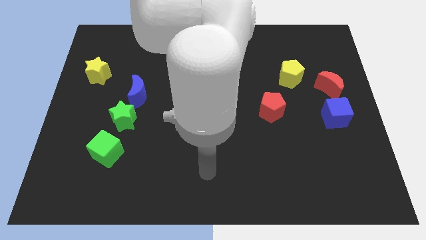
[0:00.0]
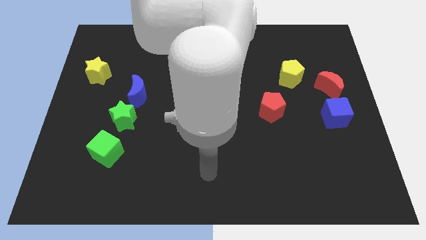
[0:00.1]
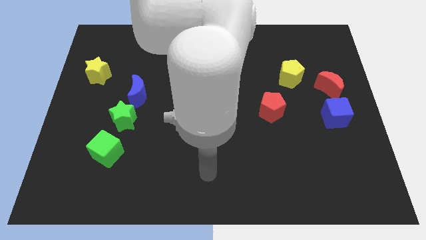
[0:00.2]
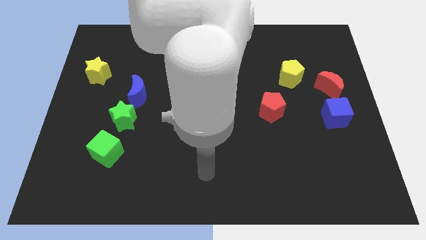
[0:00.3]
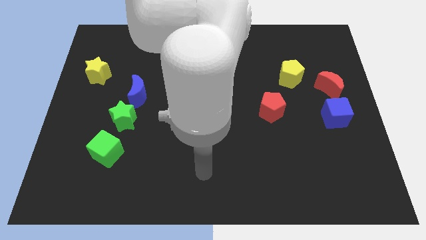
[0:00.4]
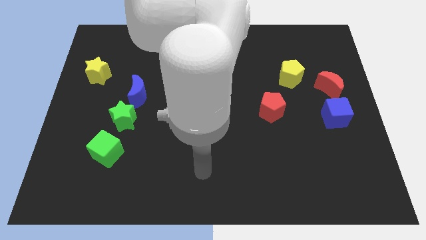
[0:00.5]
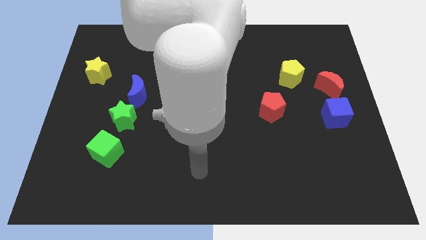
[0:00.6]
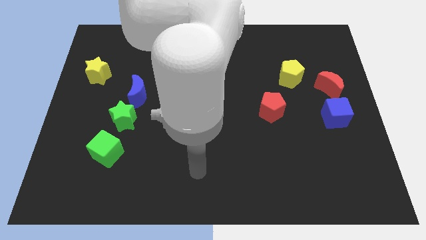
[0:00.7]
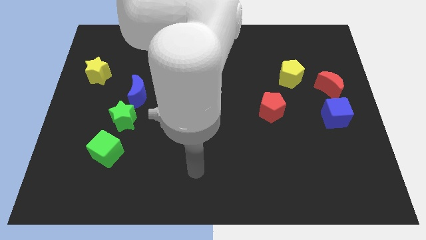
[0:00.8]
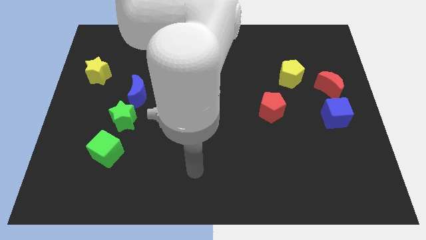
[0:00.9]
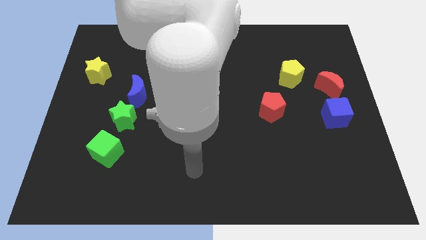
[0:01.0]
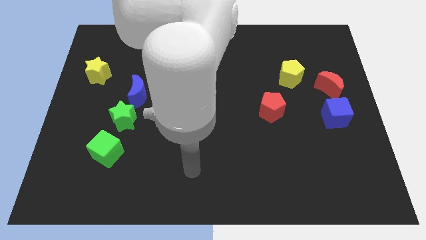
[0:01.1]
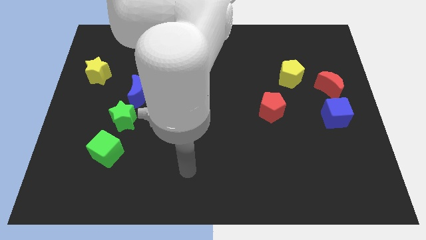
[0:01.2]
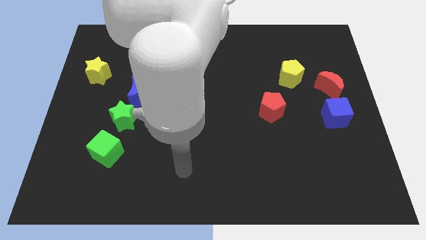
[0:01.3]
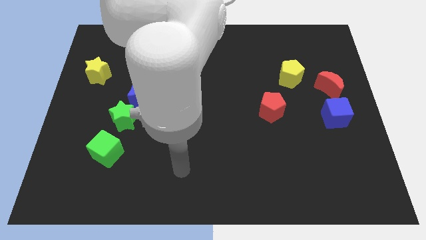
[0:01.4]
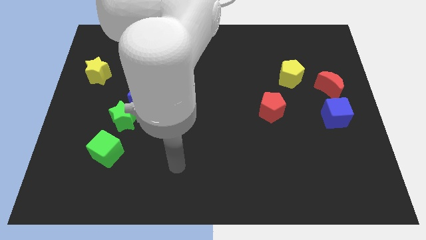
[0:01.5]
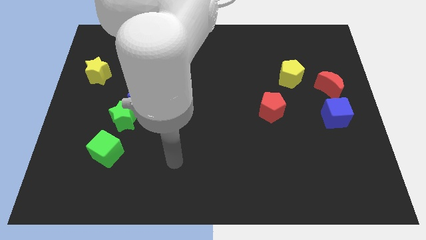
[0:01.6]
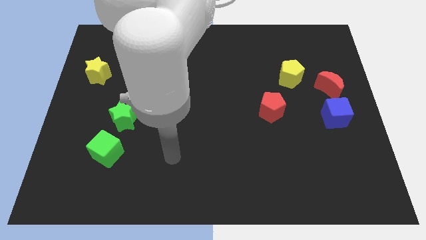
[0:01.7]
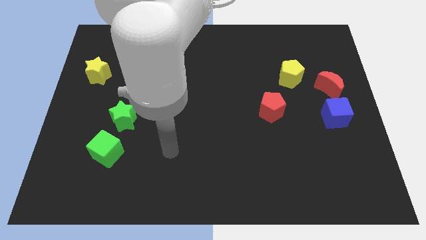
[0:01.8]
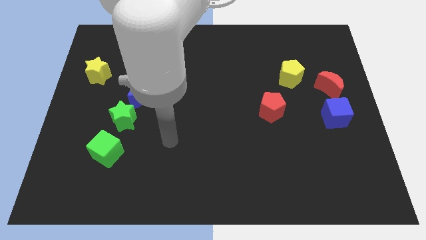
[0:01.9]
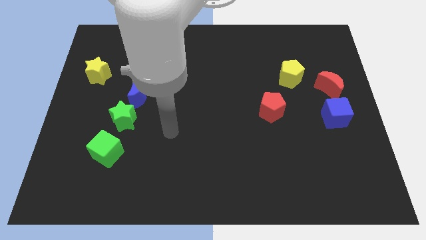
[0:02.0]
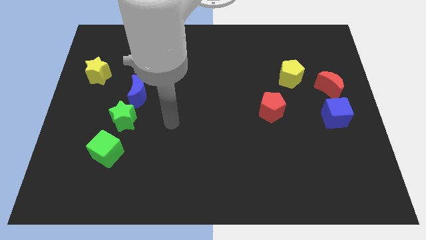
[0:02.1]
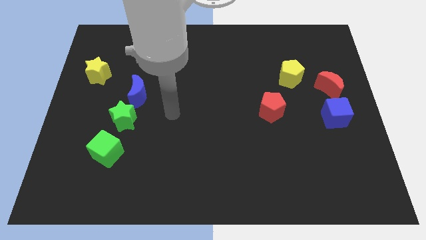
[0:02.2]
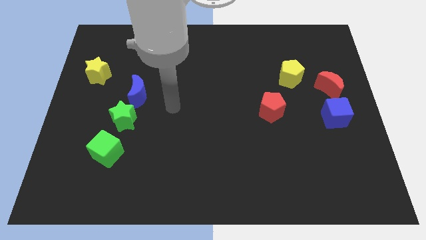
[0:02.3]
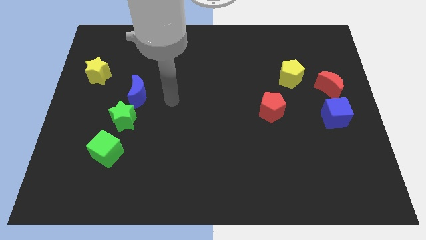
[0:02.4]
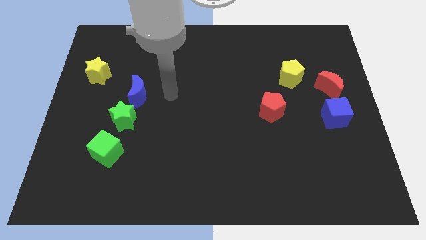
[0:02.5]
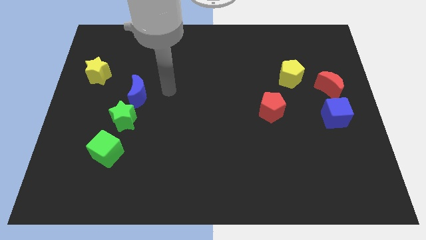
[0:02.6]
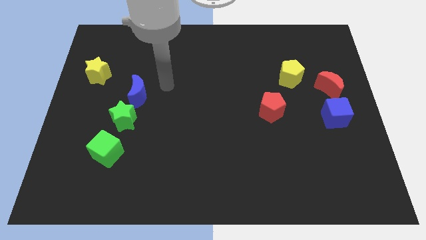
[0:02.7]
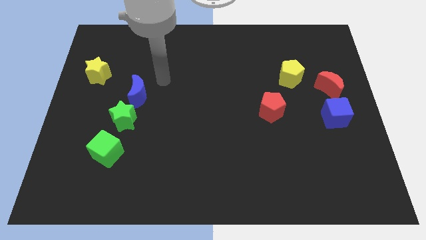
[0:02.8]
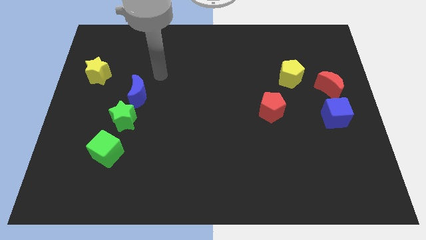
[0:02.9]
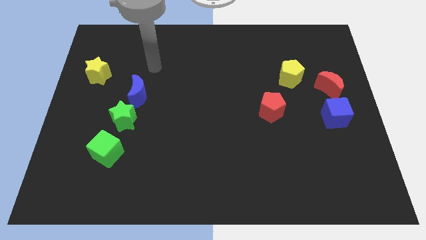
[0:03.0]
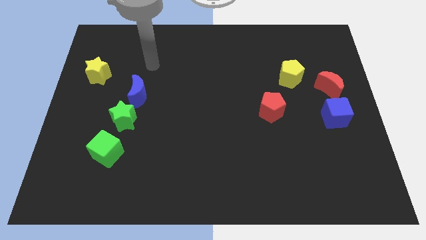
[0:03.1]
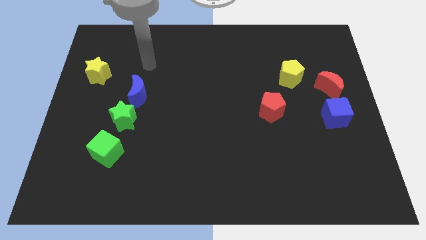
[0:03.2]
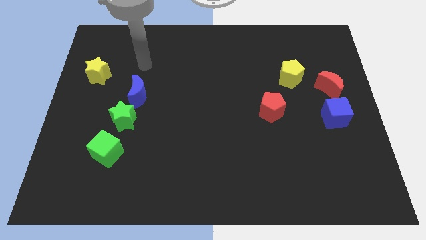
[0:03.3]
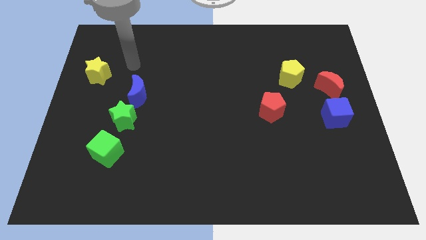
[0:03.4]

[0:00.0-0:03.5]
point the arm to the right of the yellow star

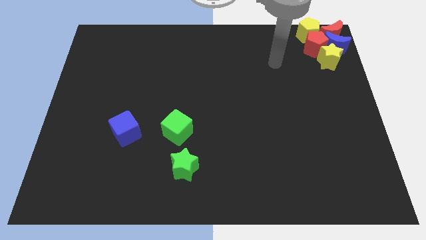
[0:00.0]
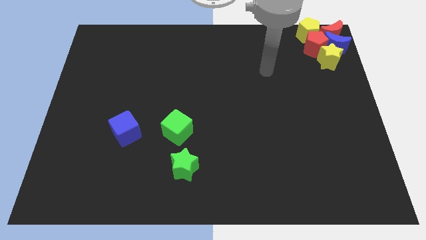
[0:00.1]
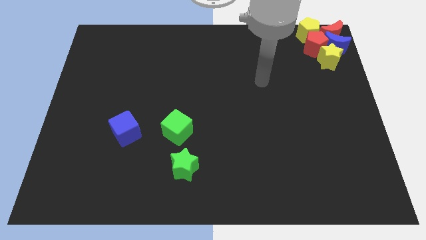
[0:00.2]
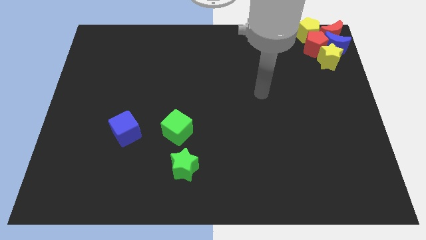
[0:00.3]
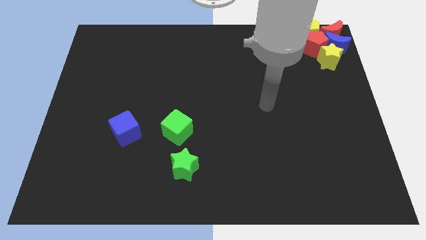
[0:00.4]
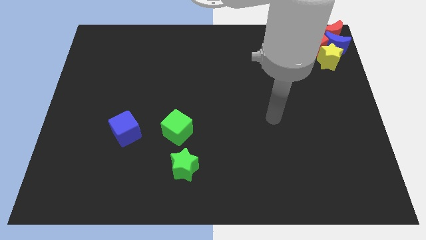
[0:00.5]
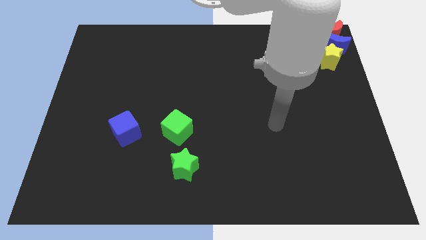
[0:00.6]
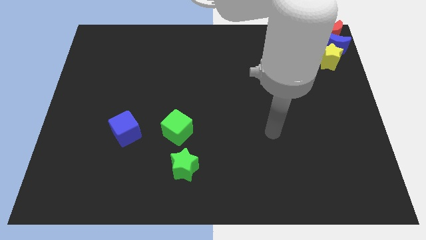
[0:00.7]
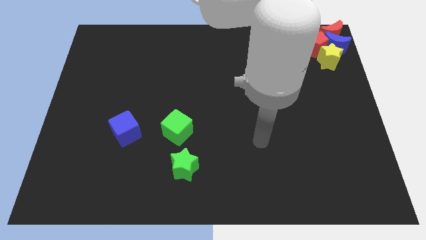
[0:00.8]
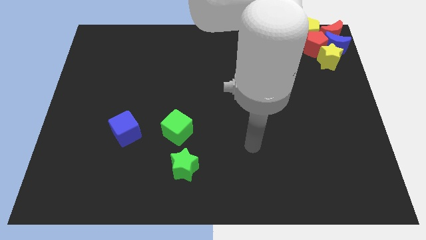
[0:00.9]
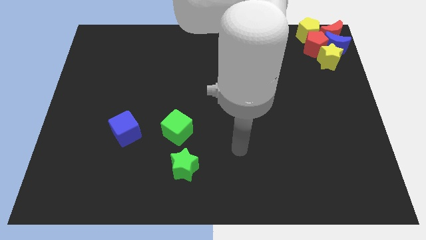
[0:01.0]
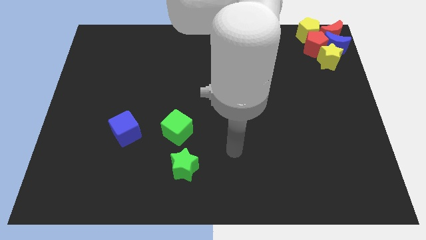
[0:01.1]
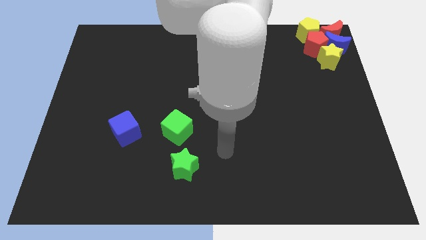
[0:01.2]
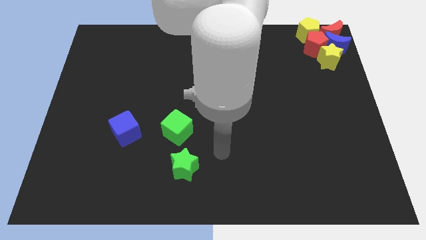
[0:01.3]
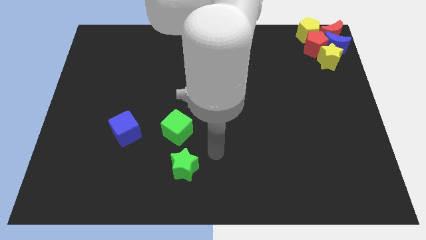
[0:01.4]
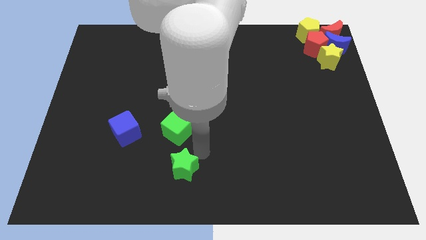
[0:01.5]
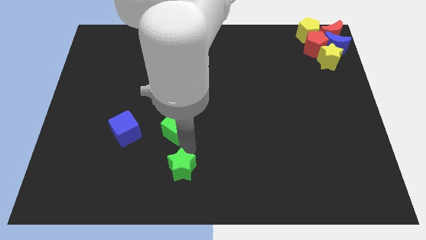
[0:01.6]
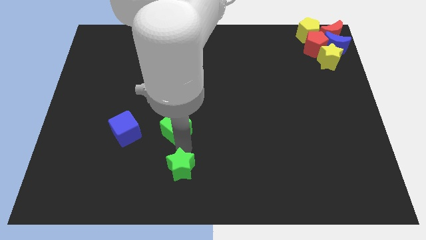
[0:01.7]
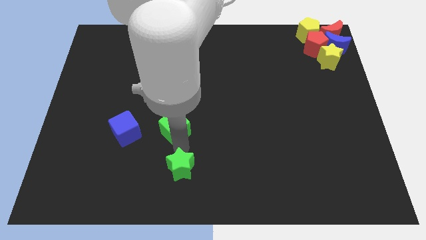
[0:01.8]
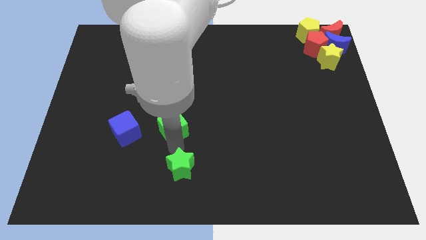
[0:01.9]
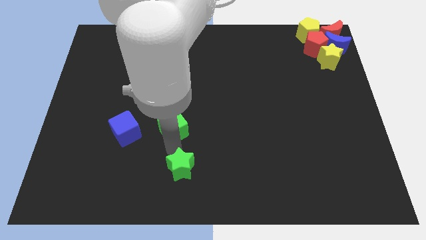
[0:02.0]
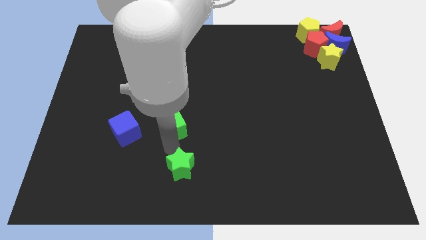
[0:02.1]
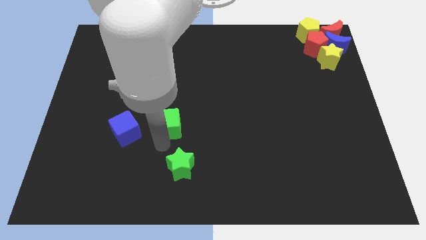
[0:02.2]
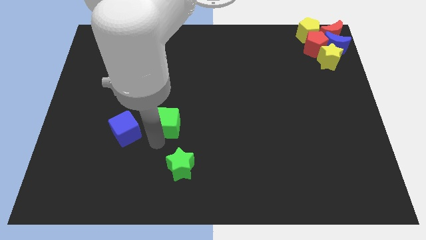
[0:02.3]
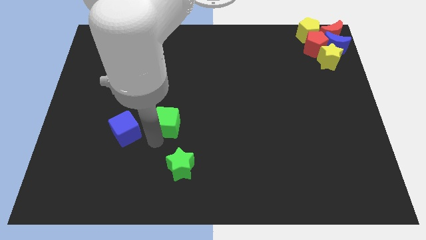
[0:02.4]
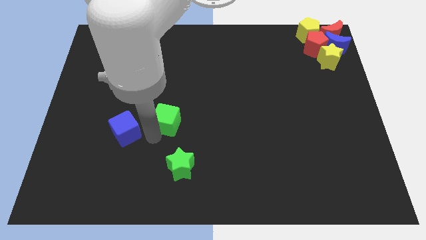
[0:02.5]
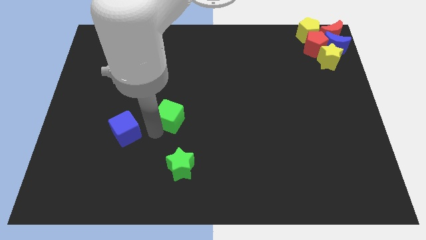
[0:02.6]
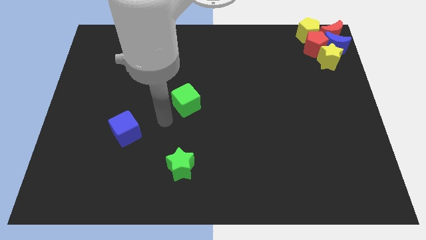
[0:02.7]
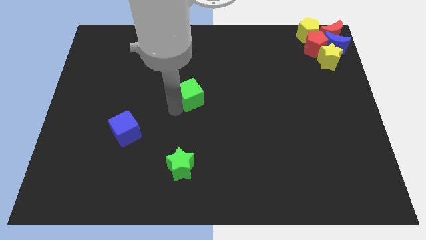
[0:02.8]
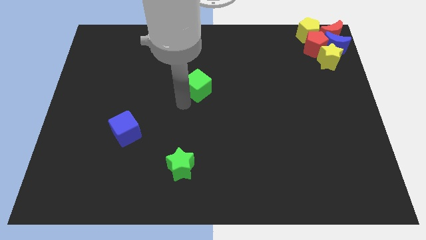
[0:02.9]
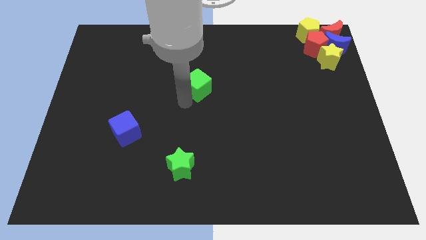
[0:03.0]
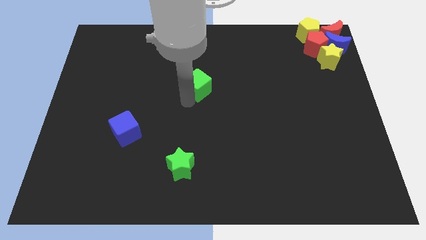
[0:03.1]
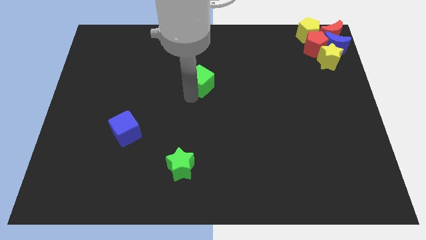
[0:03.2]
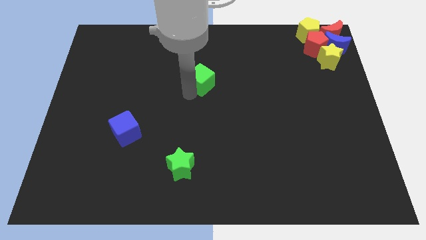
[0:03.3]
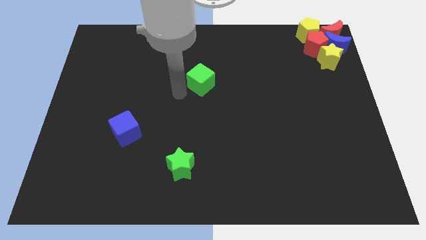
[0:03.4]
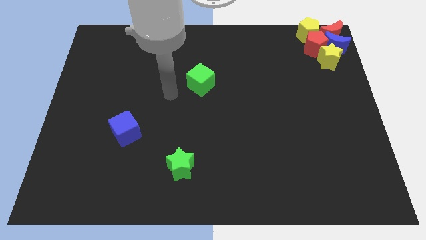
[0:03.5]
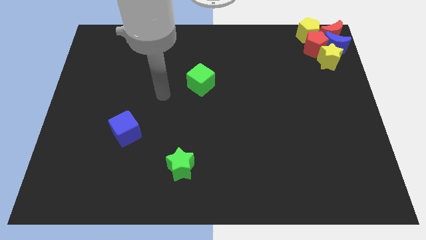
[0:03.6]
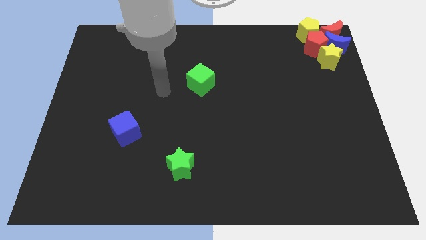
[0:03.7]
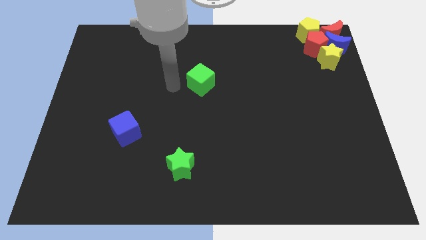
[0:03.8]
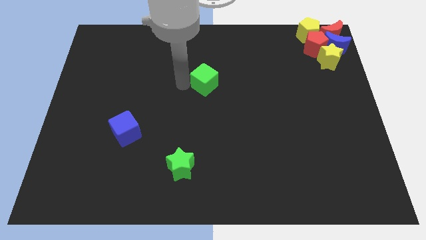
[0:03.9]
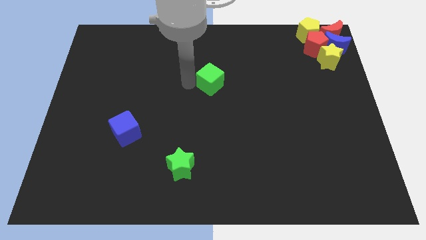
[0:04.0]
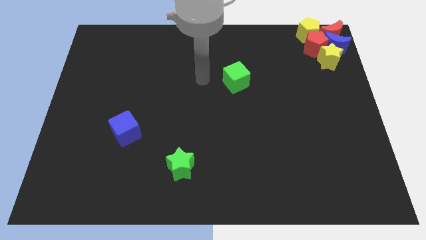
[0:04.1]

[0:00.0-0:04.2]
push the green cube to the center of the board

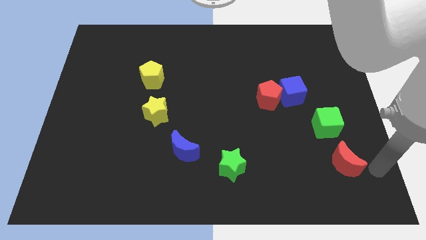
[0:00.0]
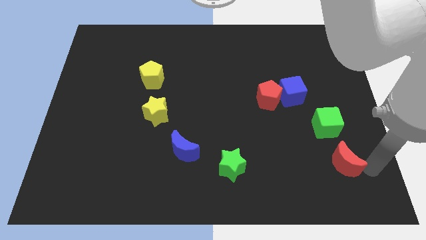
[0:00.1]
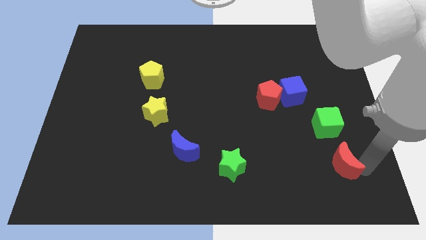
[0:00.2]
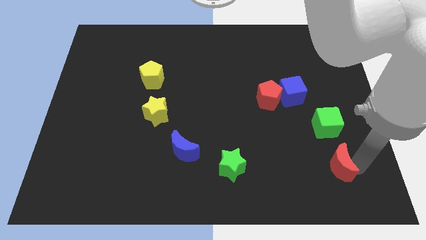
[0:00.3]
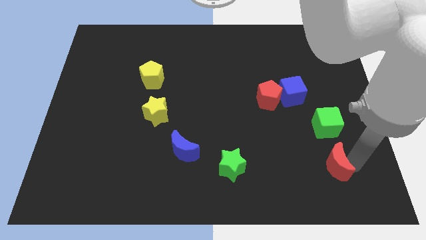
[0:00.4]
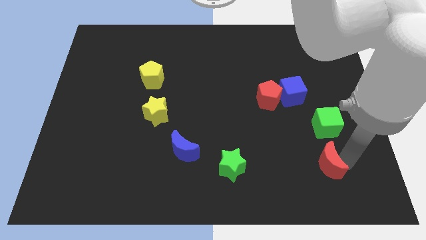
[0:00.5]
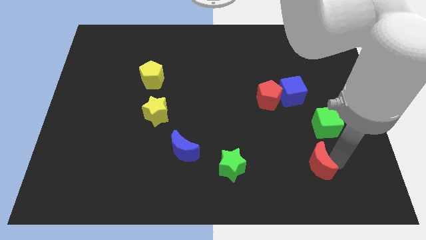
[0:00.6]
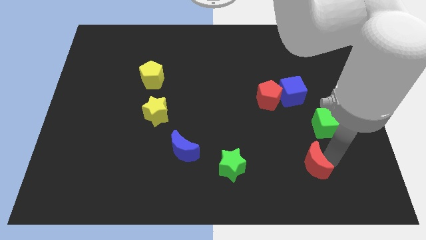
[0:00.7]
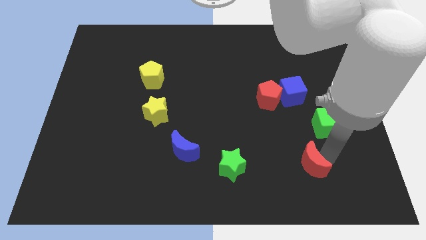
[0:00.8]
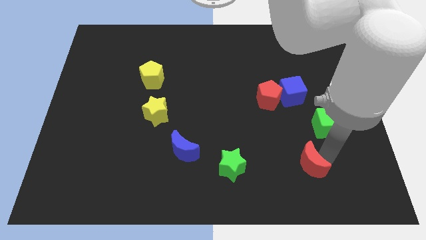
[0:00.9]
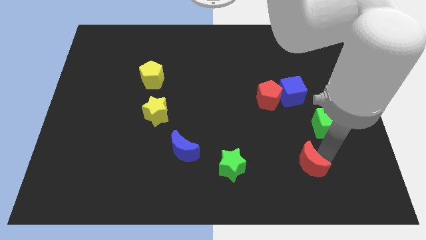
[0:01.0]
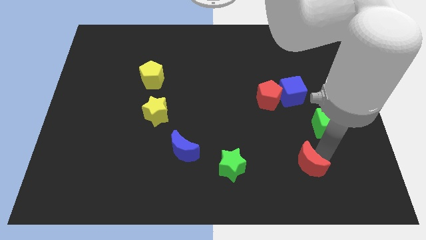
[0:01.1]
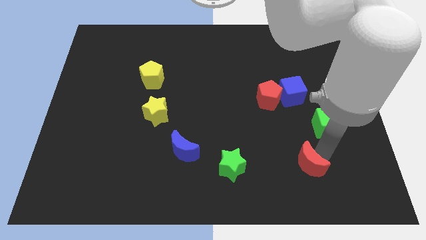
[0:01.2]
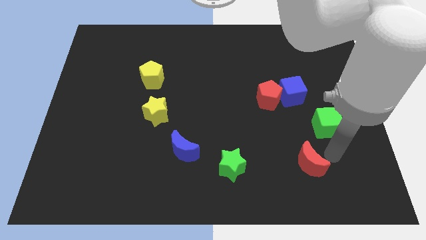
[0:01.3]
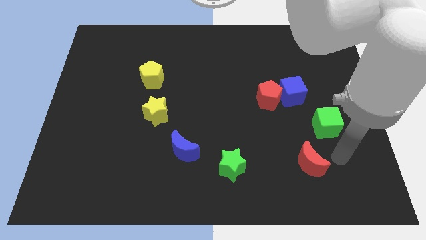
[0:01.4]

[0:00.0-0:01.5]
move the red crescent towards the green star
